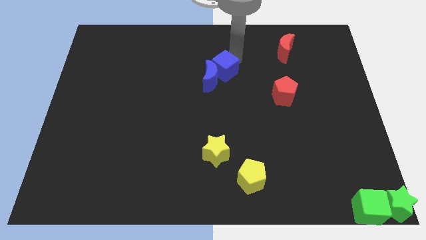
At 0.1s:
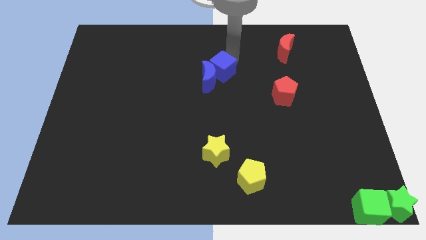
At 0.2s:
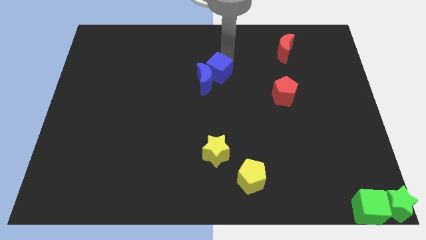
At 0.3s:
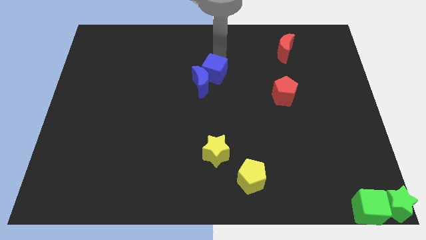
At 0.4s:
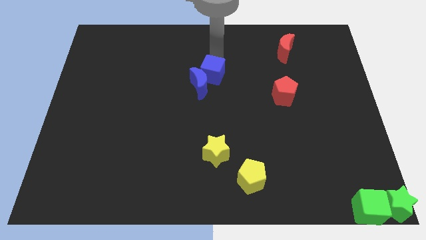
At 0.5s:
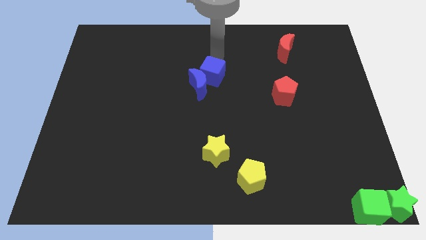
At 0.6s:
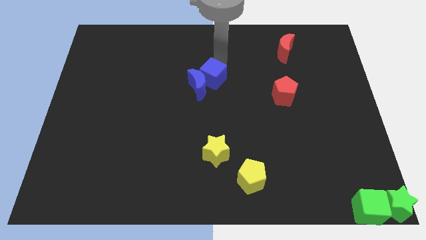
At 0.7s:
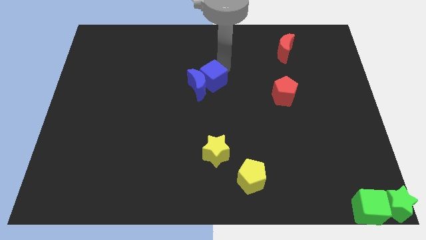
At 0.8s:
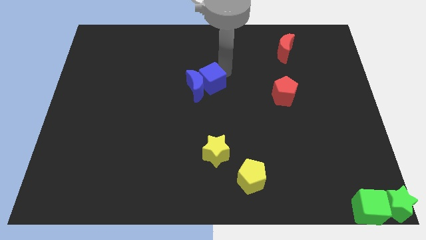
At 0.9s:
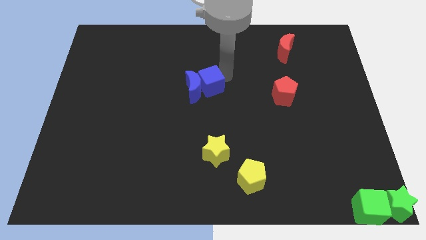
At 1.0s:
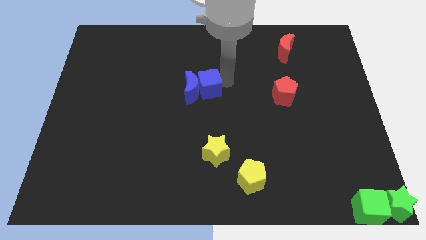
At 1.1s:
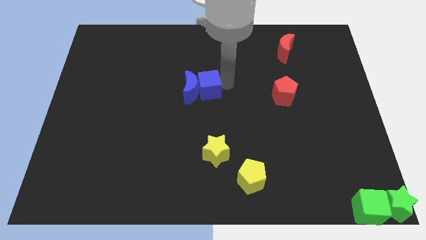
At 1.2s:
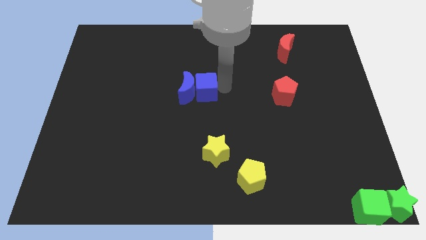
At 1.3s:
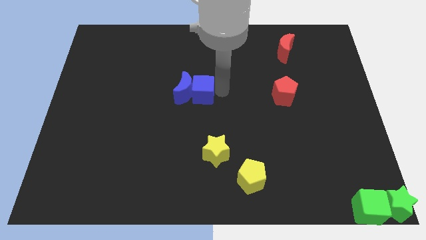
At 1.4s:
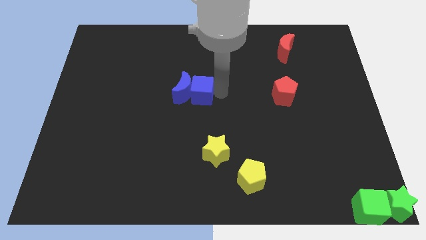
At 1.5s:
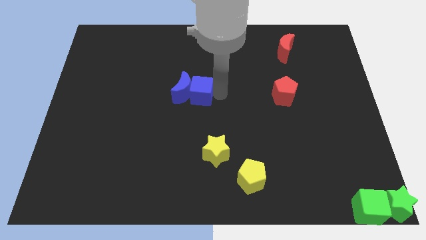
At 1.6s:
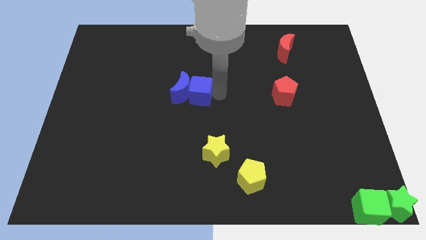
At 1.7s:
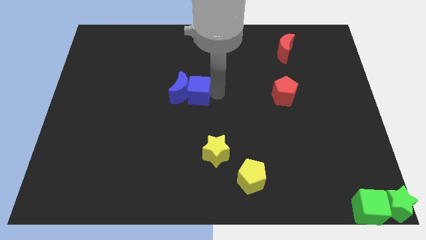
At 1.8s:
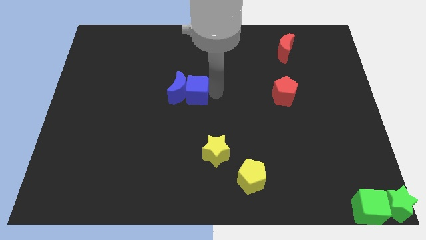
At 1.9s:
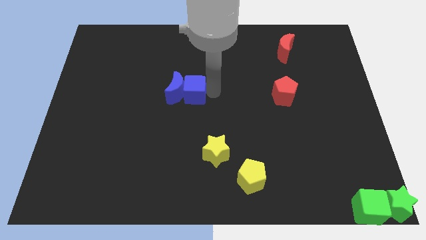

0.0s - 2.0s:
place blue cube to the center of the board

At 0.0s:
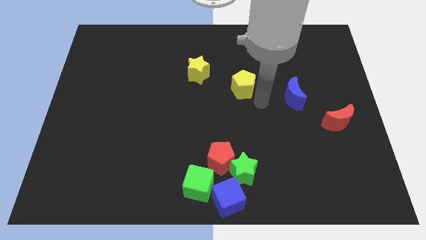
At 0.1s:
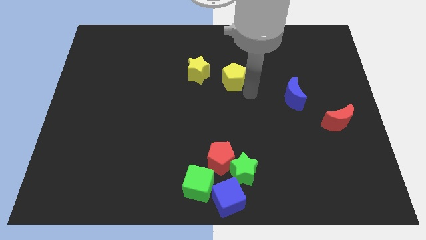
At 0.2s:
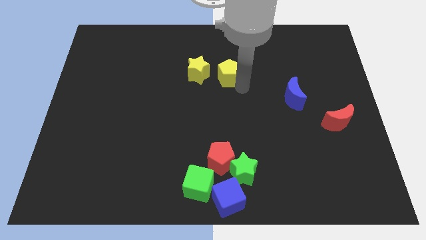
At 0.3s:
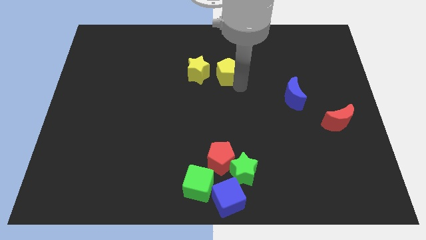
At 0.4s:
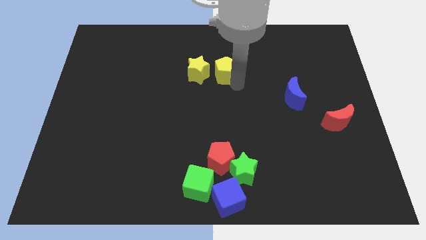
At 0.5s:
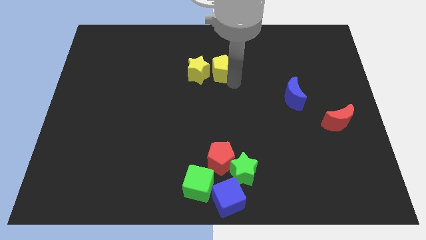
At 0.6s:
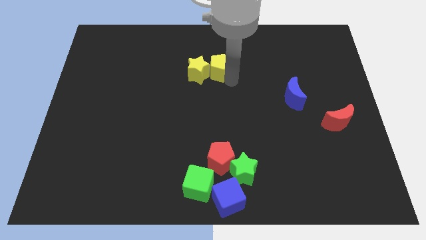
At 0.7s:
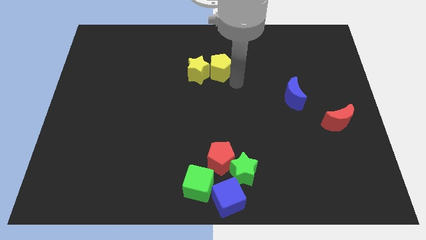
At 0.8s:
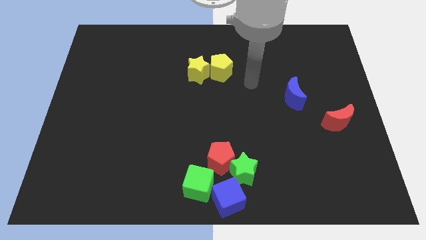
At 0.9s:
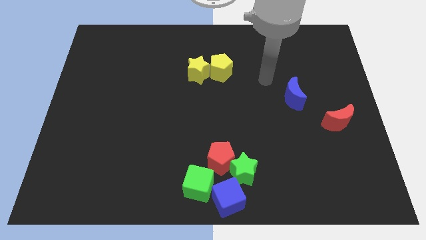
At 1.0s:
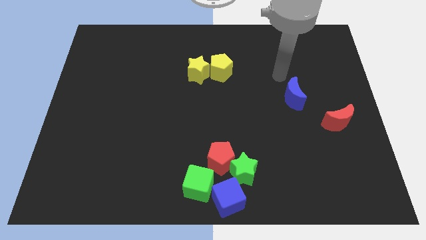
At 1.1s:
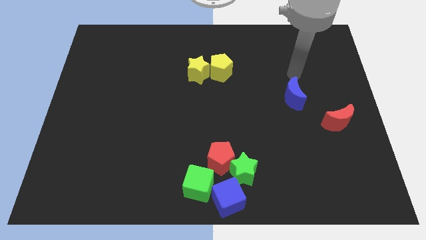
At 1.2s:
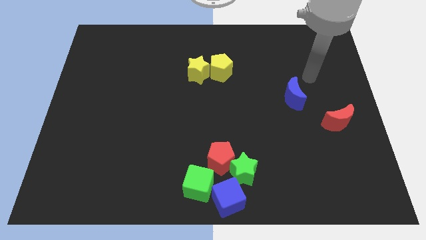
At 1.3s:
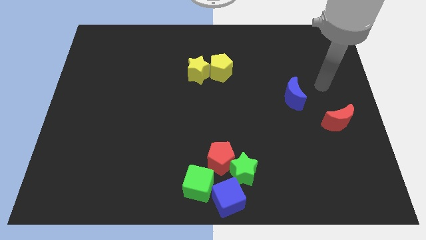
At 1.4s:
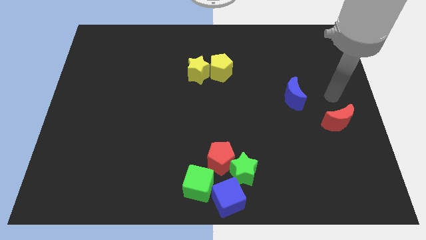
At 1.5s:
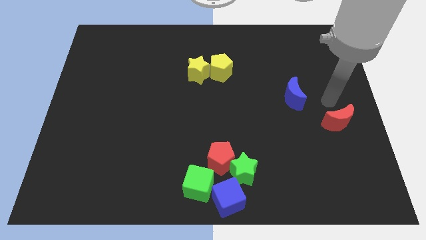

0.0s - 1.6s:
move the yellow pentagon to the right side of yellow star

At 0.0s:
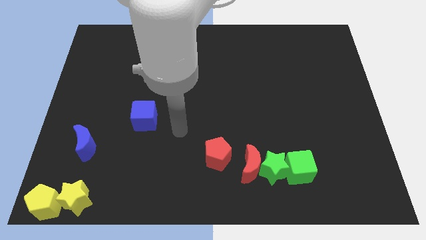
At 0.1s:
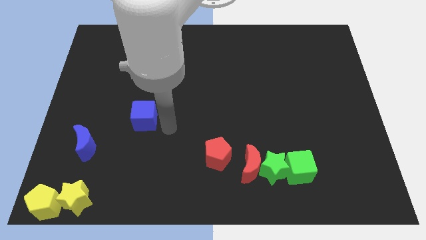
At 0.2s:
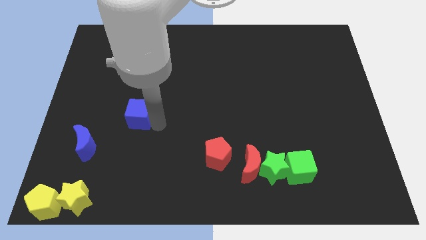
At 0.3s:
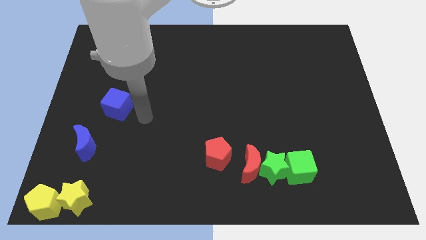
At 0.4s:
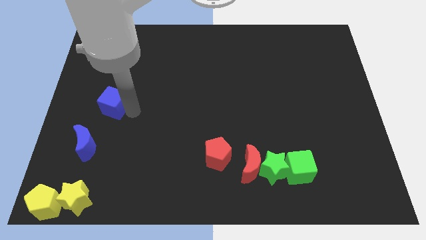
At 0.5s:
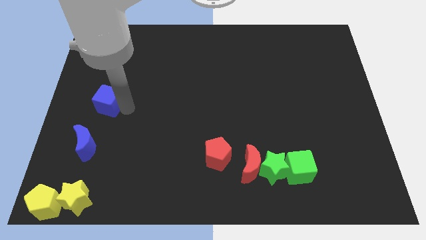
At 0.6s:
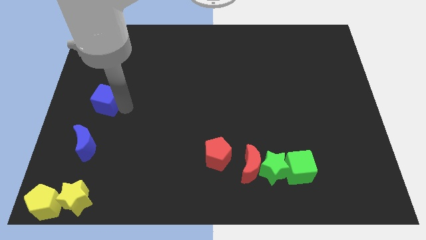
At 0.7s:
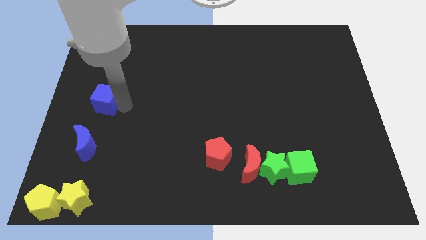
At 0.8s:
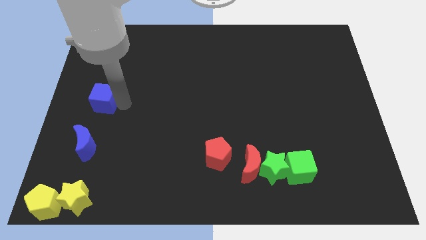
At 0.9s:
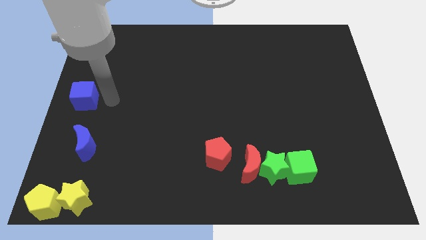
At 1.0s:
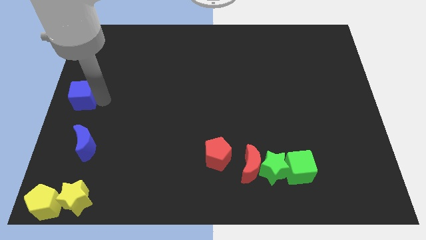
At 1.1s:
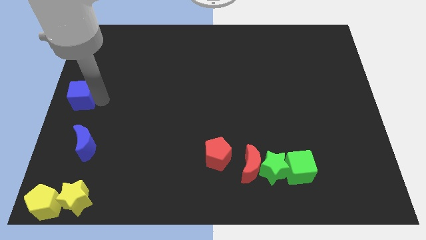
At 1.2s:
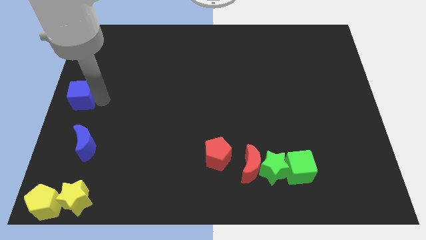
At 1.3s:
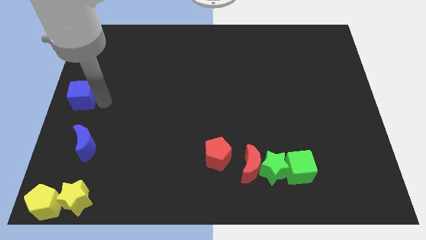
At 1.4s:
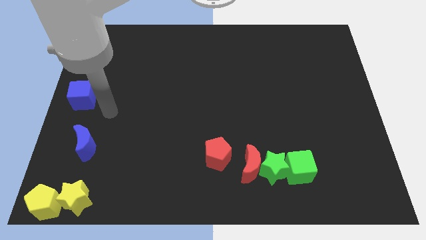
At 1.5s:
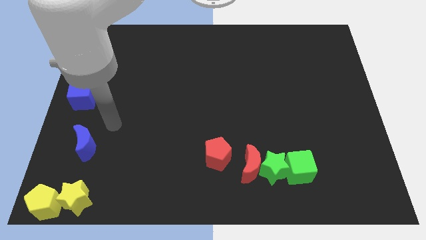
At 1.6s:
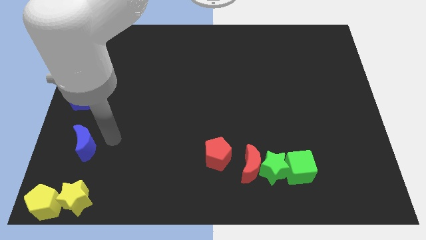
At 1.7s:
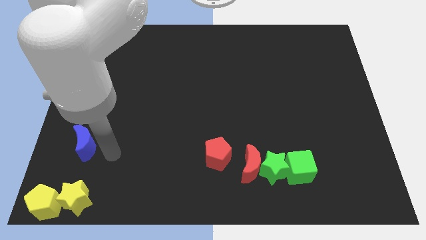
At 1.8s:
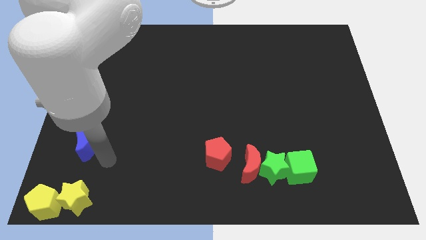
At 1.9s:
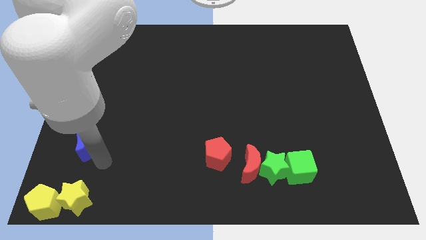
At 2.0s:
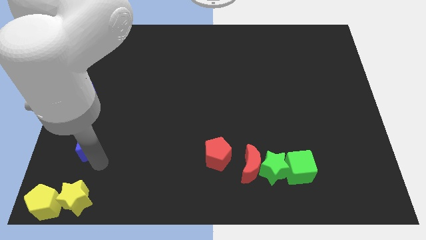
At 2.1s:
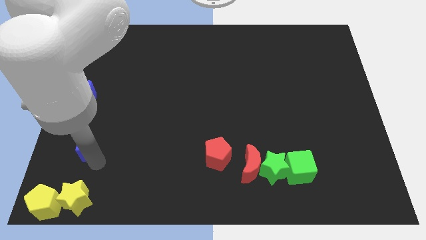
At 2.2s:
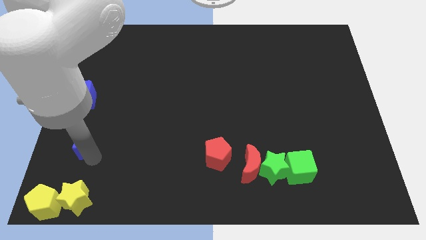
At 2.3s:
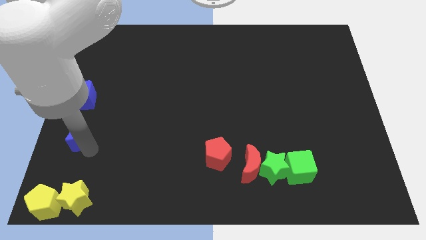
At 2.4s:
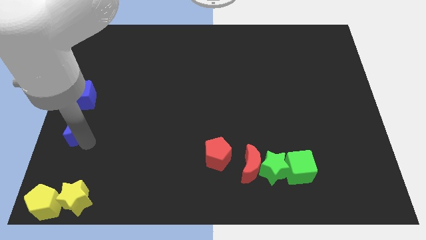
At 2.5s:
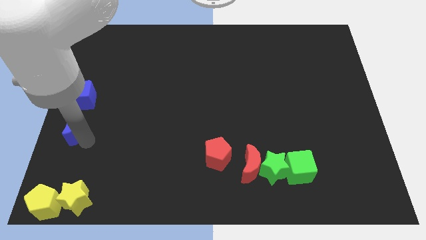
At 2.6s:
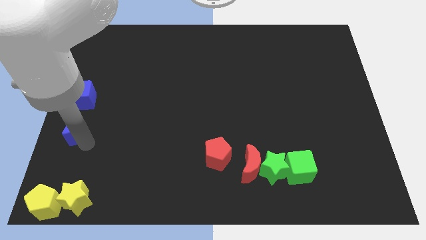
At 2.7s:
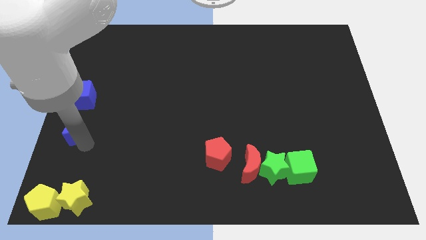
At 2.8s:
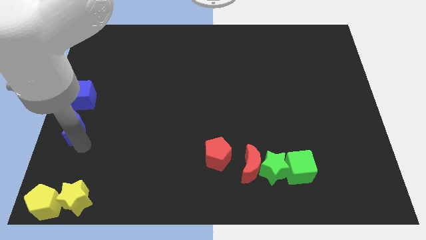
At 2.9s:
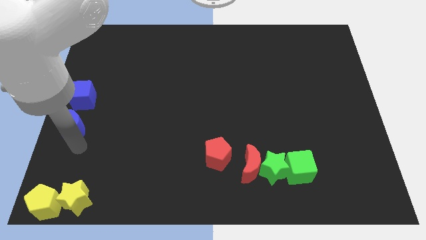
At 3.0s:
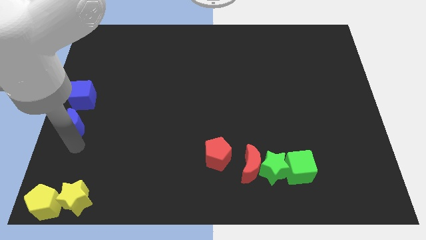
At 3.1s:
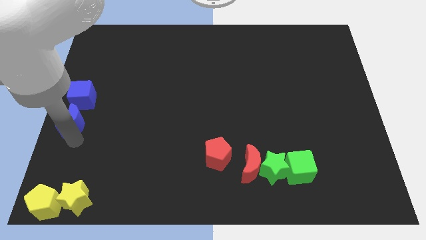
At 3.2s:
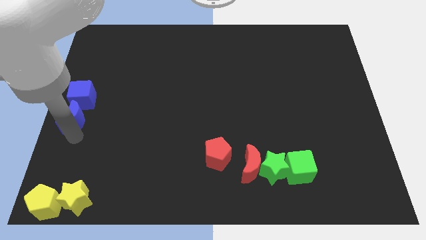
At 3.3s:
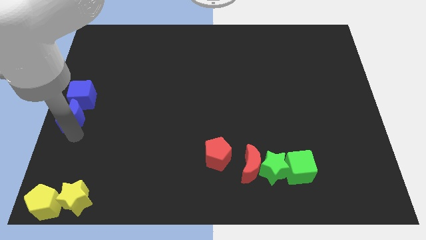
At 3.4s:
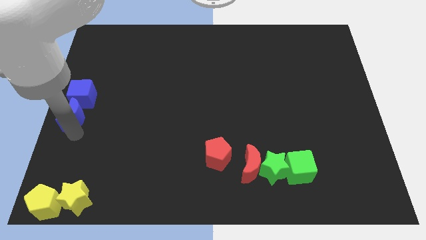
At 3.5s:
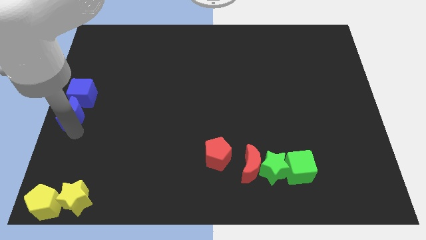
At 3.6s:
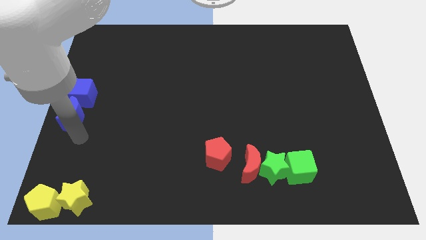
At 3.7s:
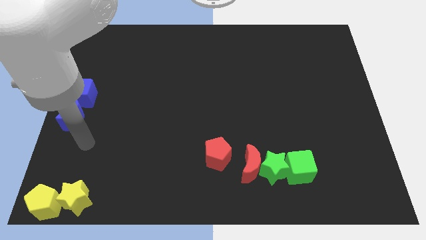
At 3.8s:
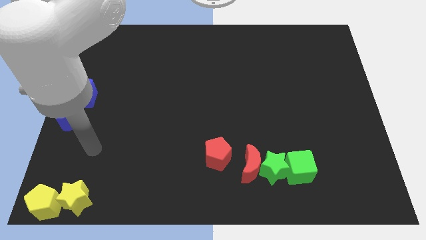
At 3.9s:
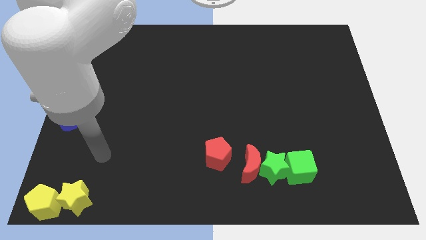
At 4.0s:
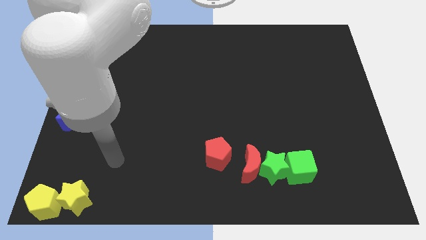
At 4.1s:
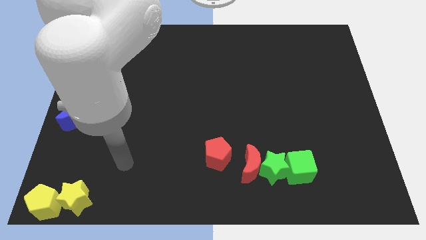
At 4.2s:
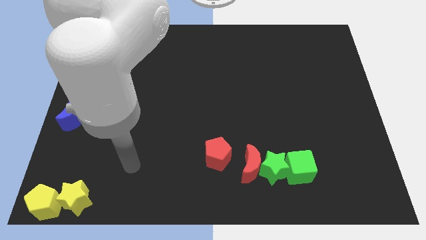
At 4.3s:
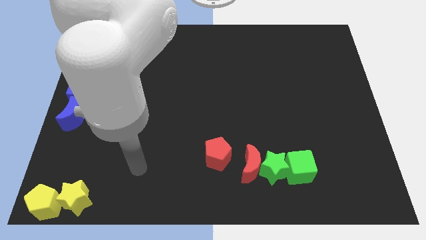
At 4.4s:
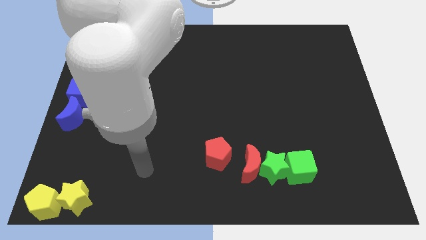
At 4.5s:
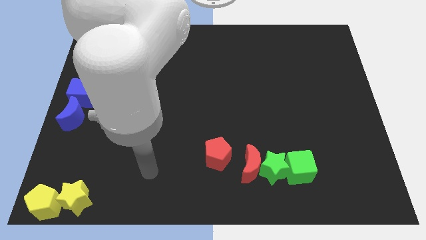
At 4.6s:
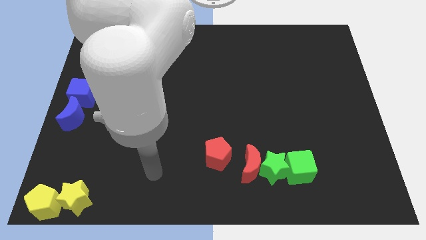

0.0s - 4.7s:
push the blue crescent into the blue cube

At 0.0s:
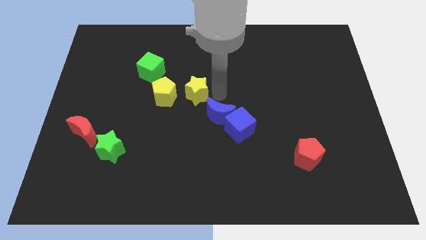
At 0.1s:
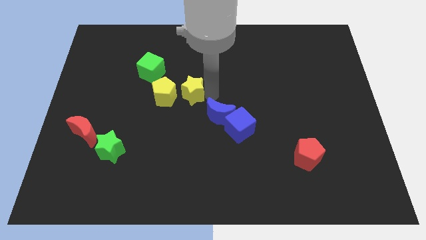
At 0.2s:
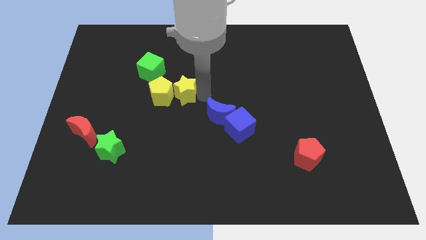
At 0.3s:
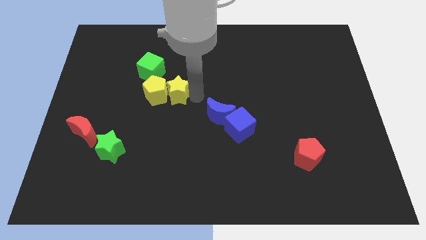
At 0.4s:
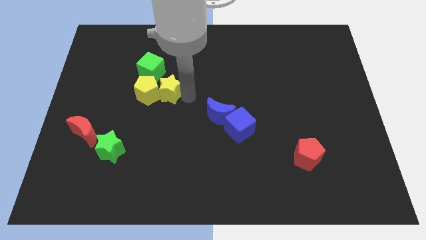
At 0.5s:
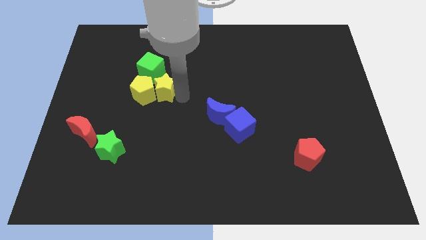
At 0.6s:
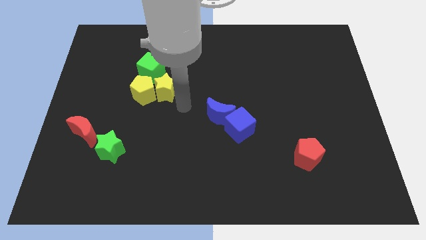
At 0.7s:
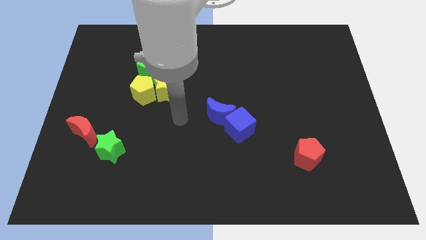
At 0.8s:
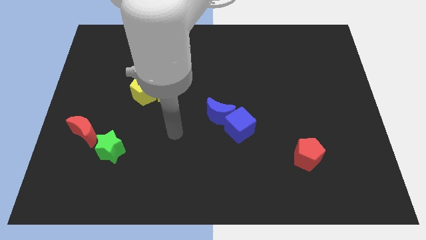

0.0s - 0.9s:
push the yellow star towards the right side of the yellow pentagon
